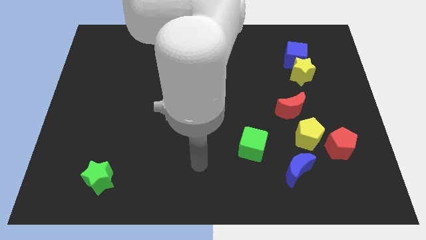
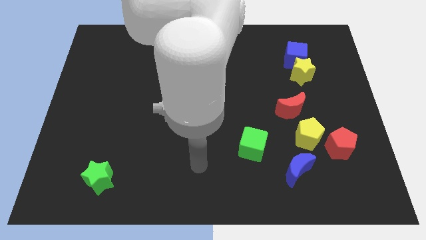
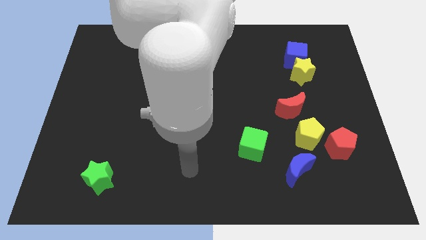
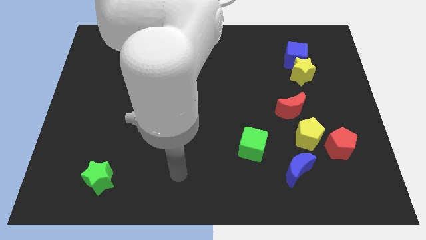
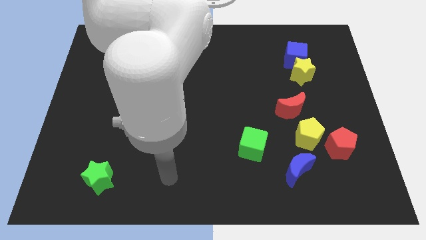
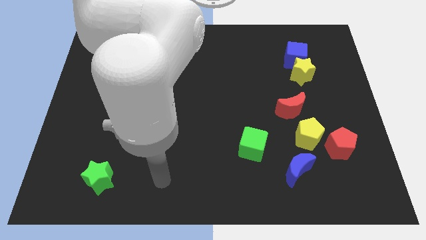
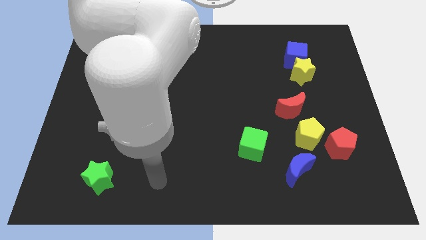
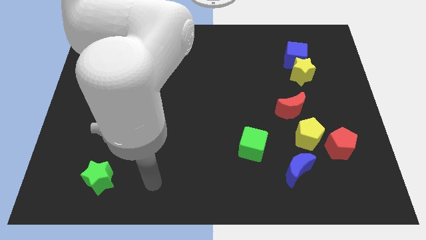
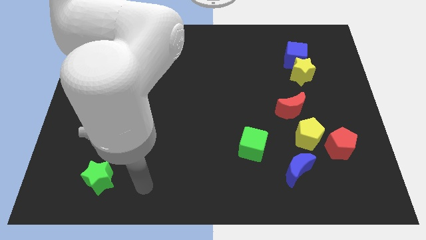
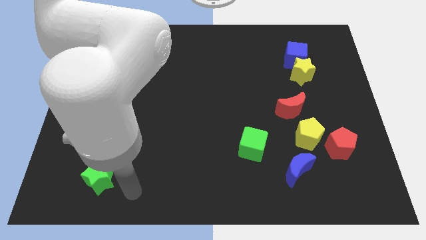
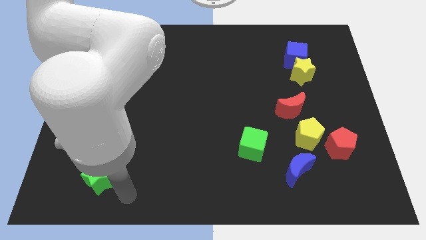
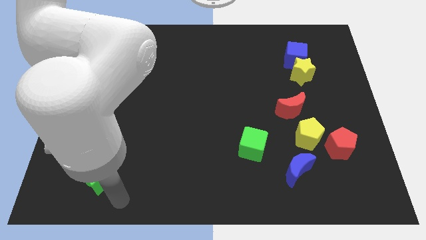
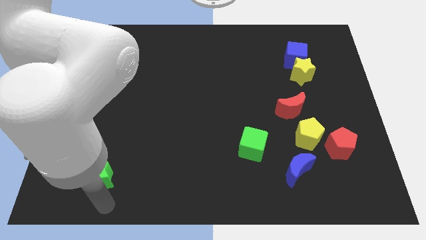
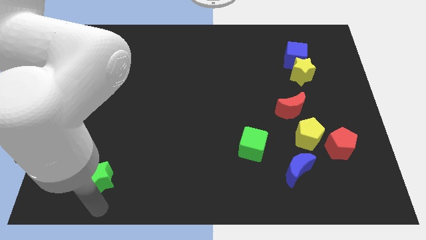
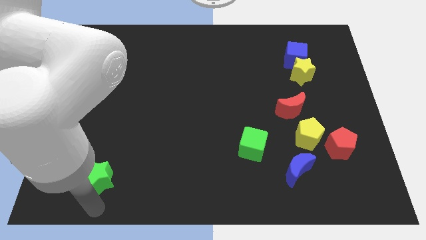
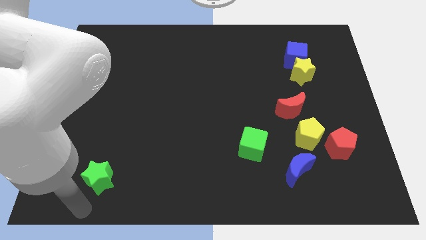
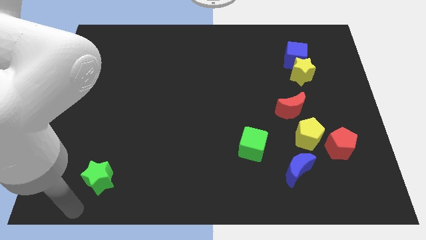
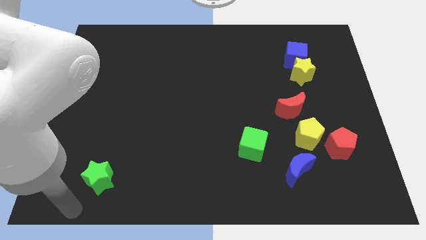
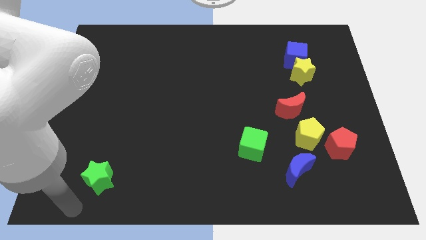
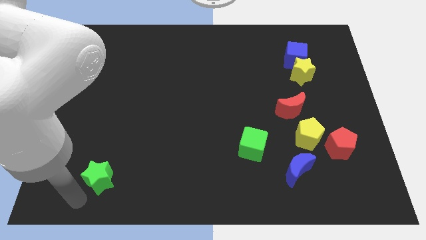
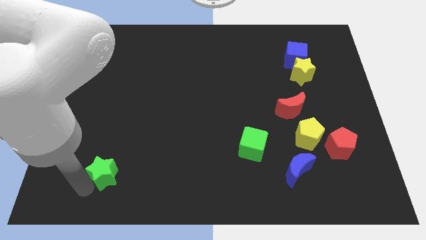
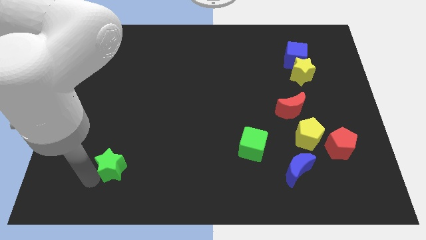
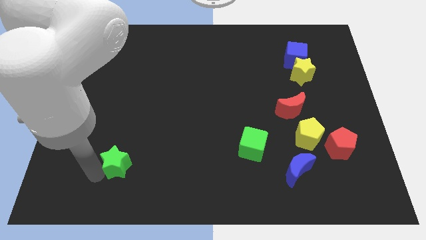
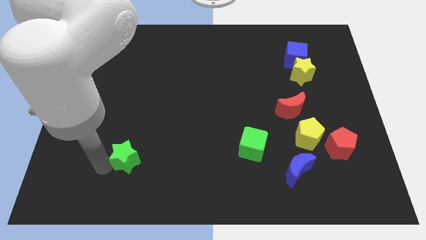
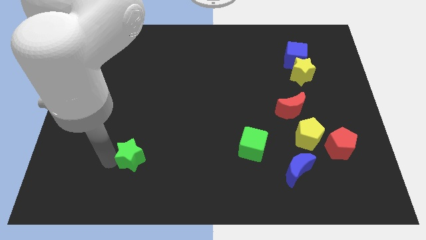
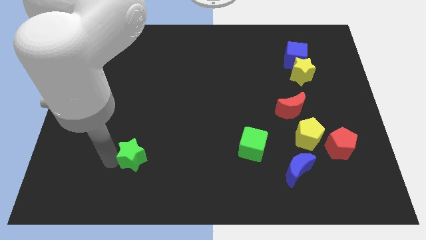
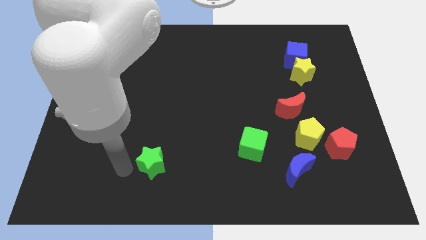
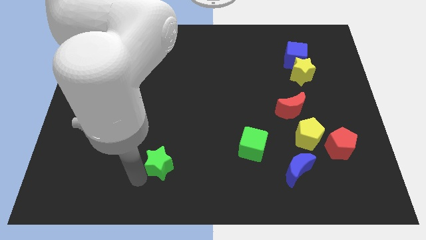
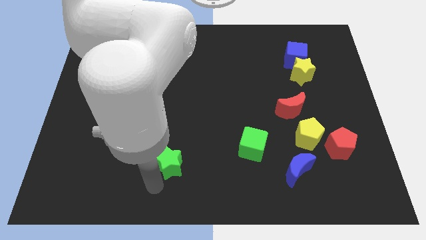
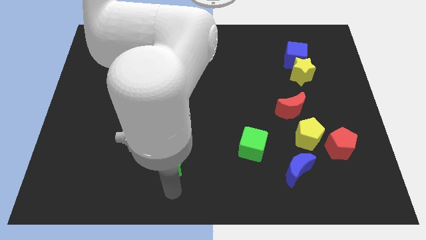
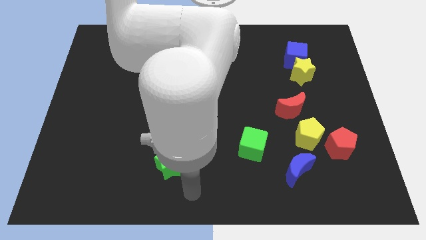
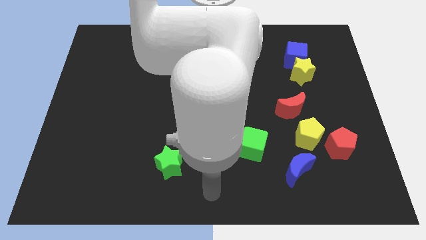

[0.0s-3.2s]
slide the green star slightly towards the green cube

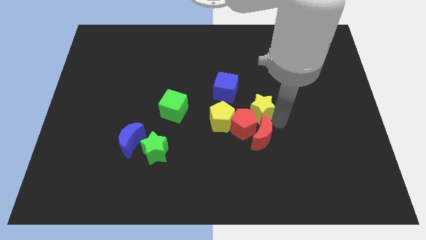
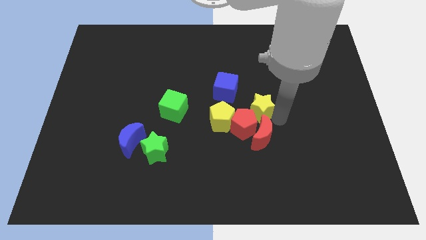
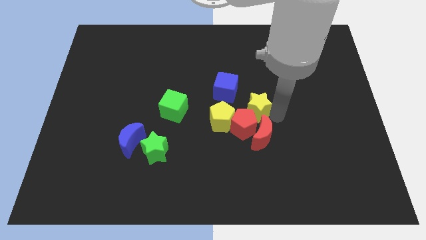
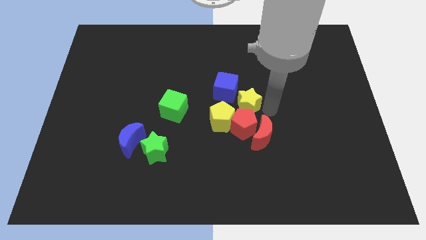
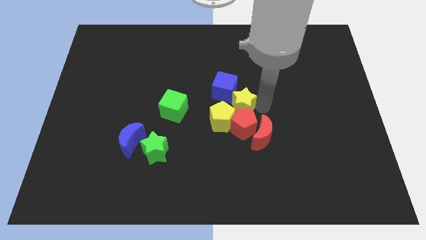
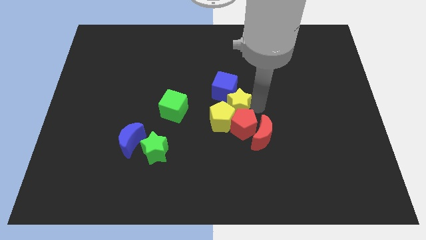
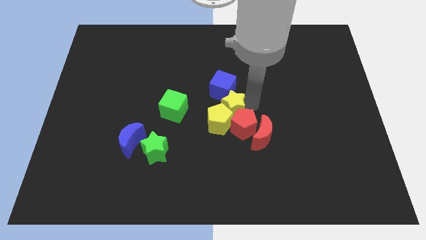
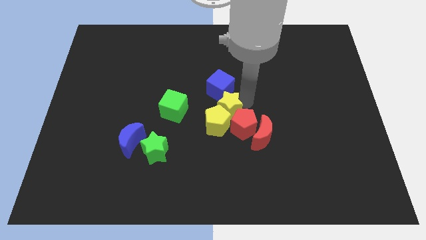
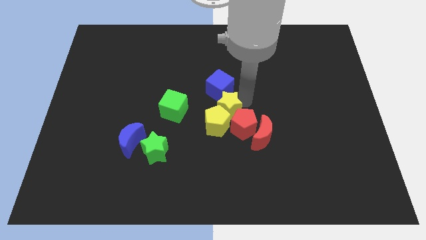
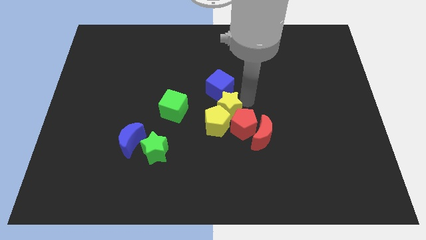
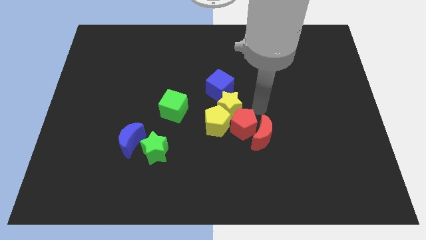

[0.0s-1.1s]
place the yellow star towards the top right side of the yellow pentagon

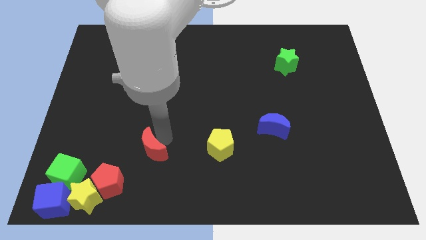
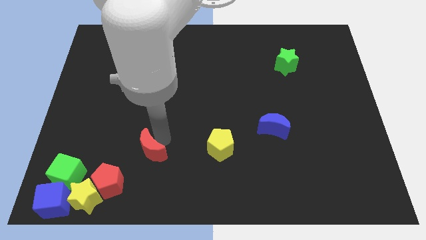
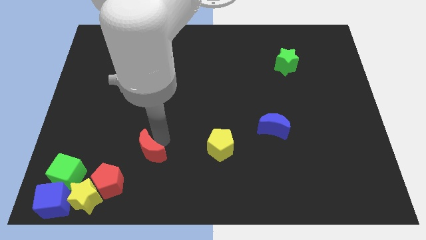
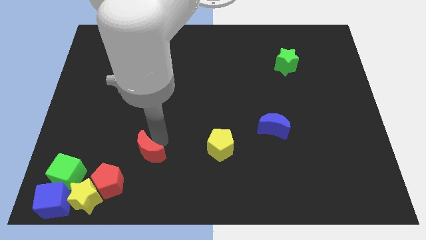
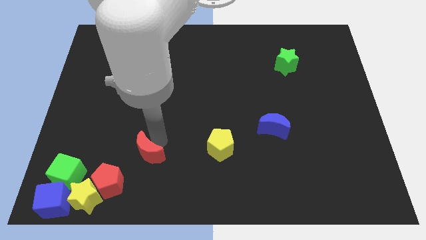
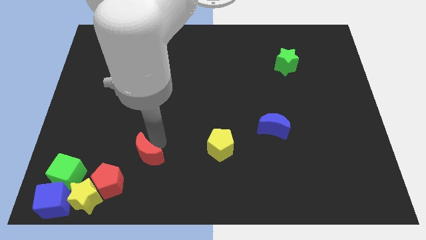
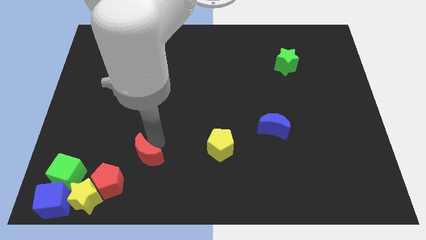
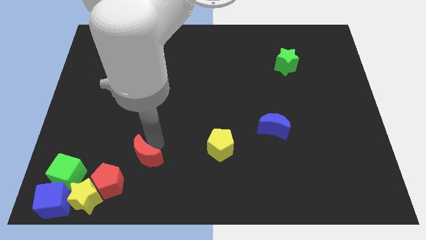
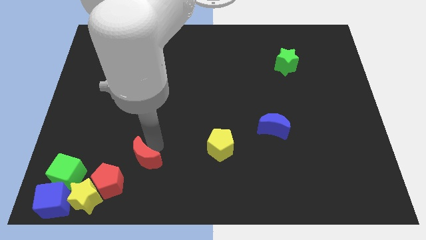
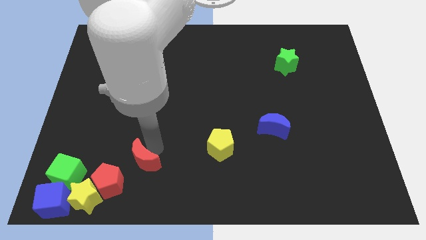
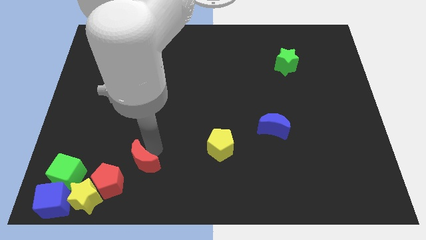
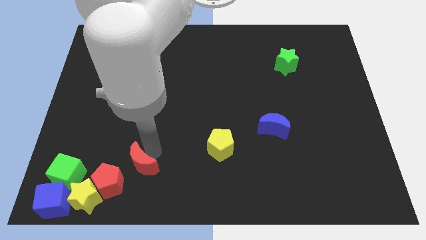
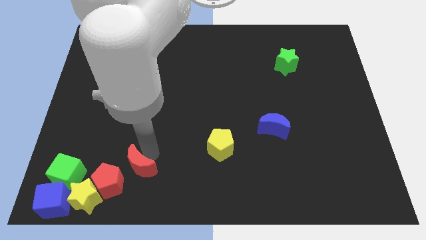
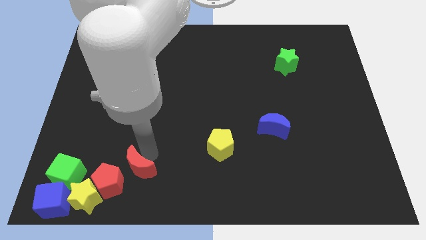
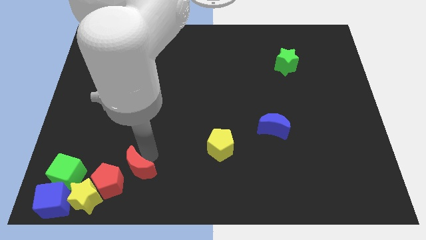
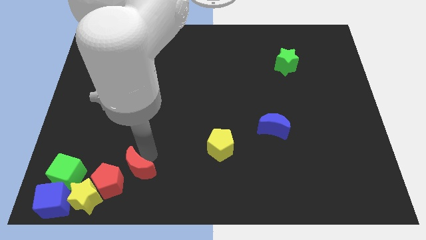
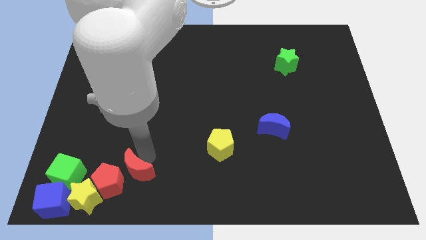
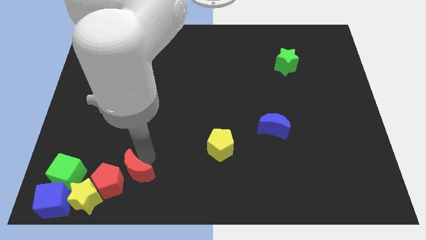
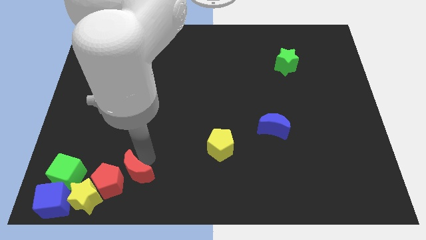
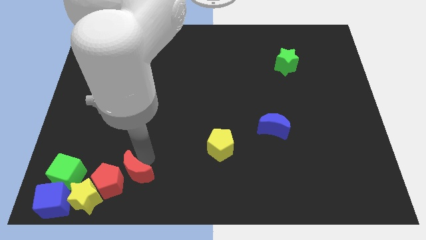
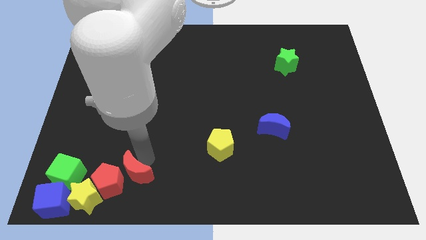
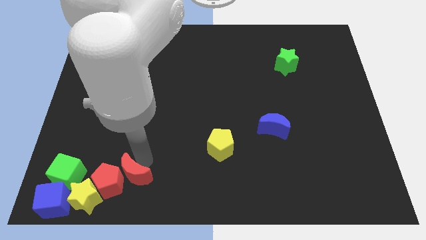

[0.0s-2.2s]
place the red crescent to the right of the red pentagon

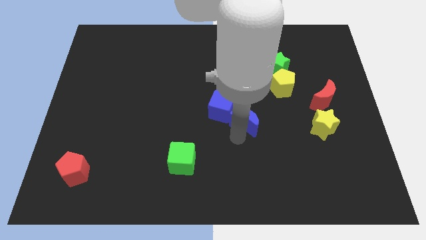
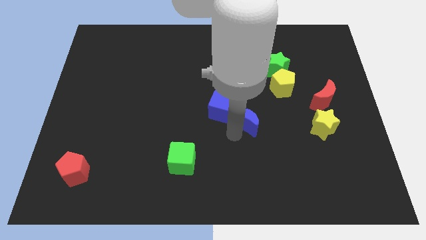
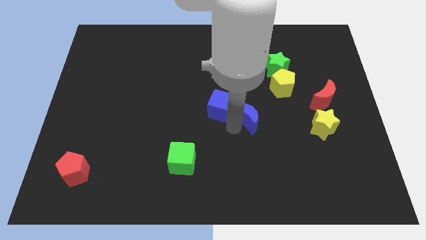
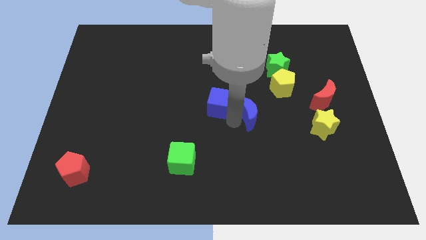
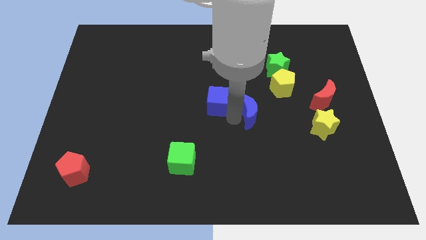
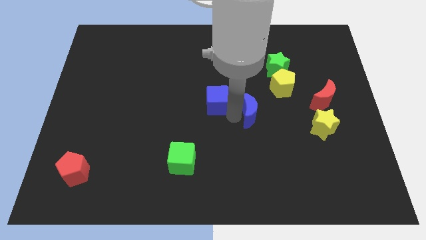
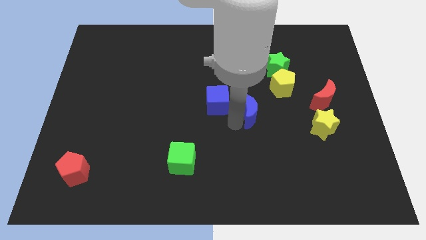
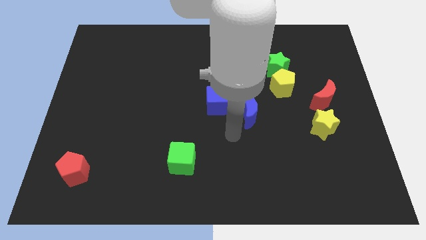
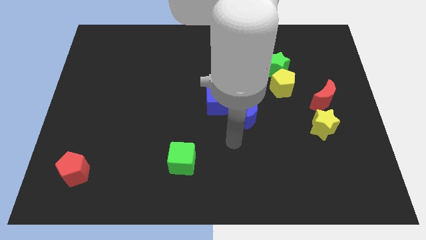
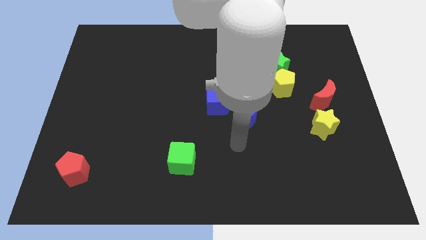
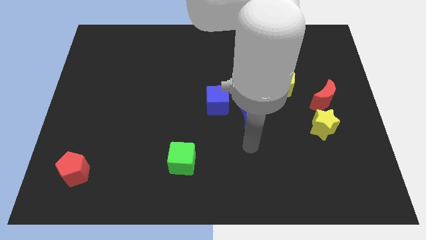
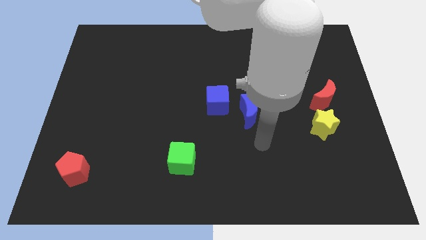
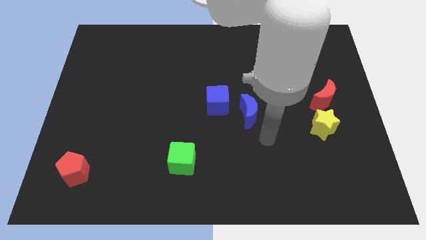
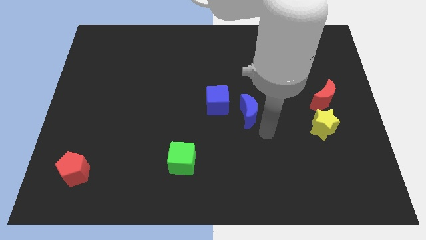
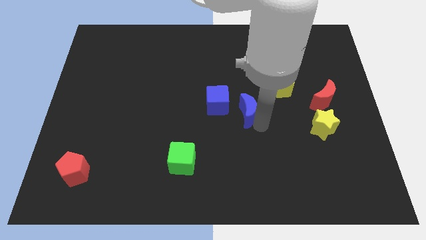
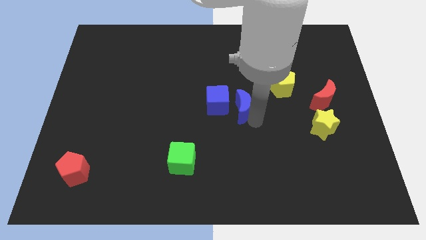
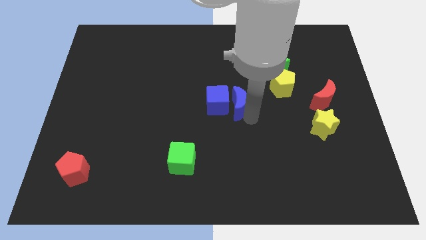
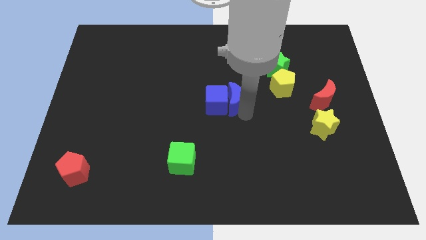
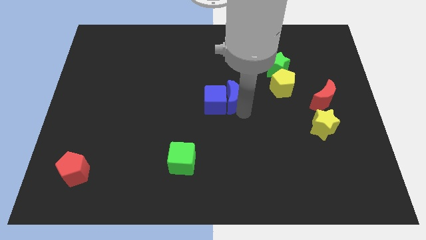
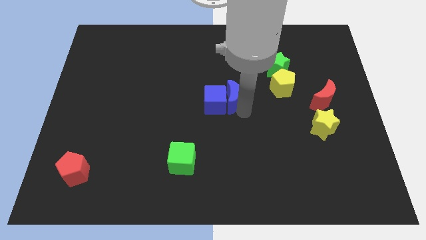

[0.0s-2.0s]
place the blue blocks at the center of the board

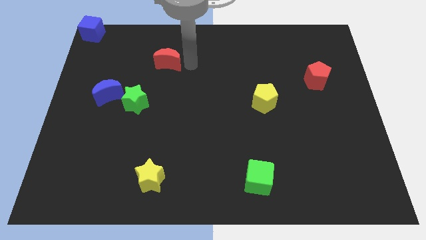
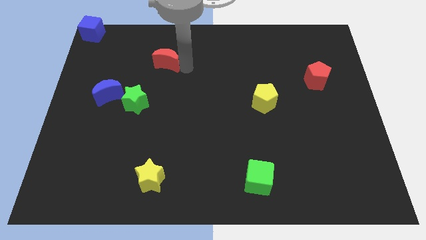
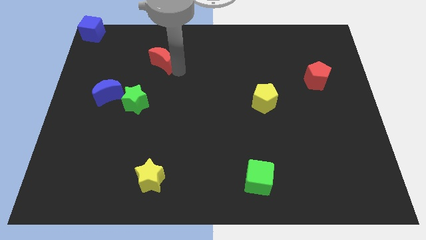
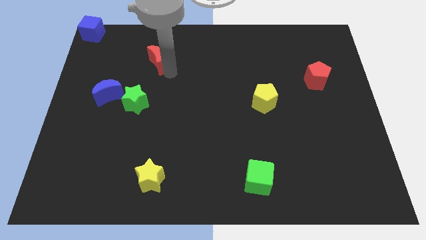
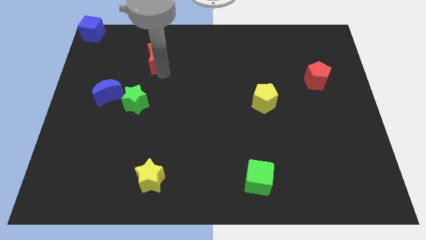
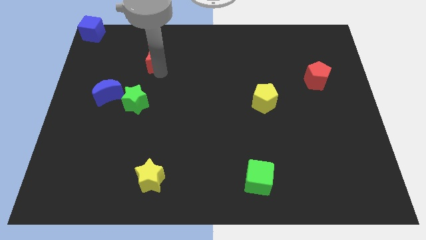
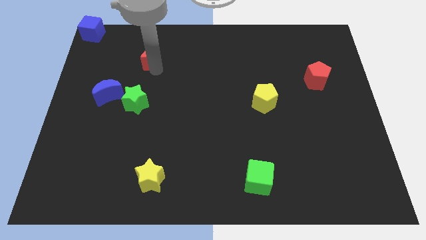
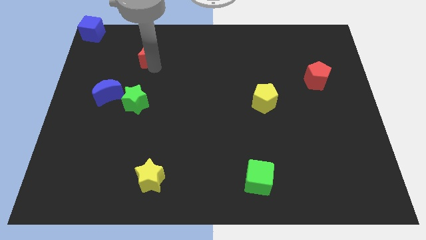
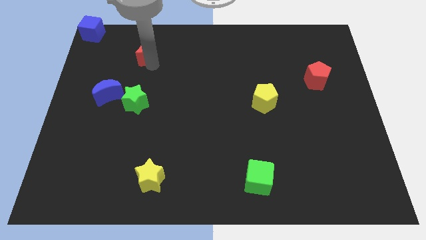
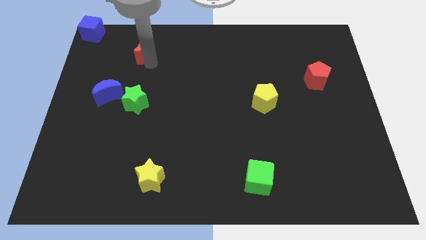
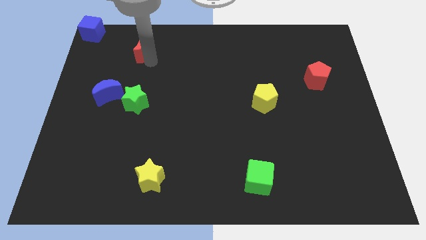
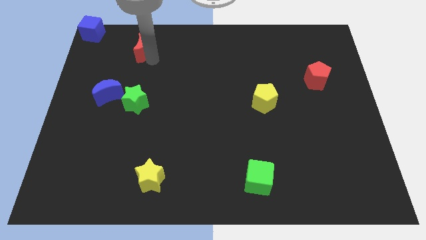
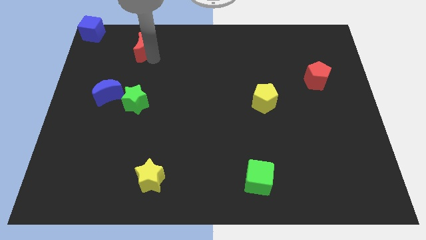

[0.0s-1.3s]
push the red moon block towards the blue cube
